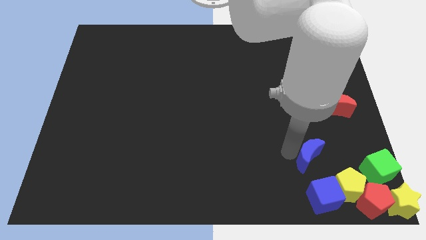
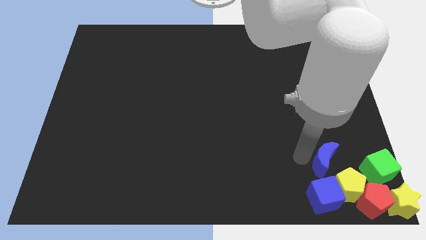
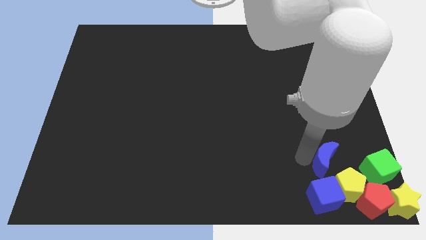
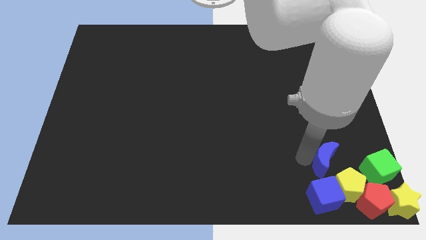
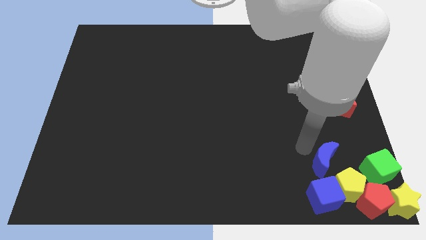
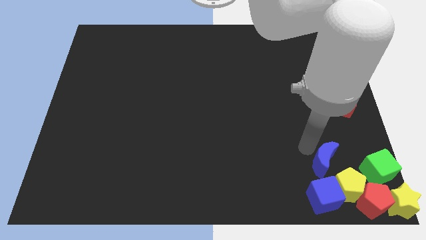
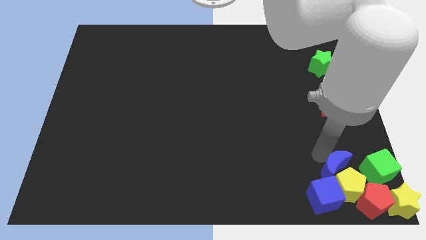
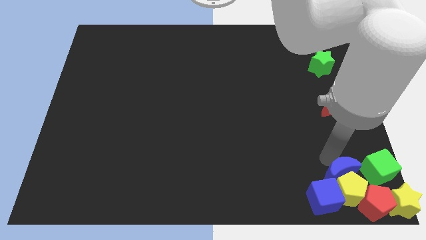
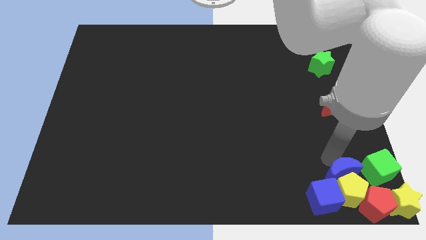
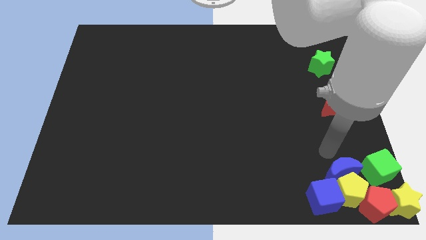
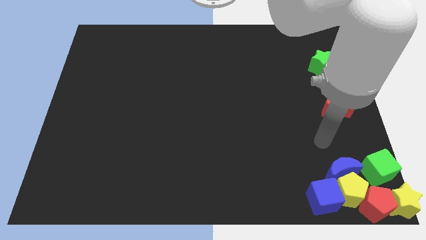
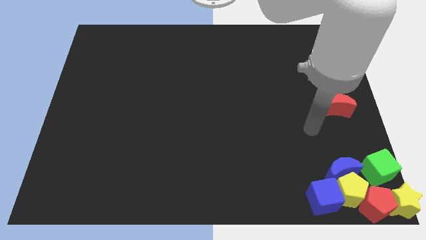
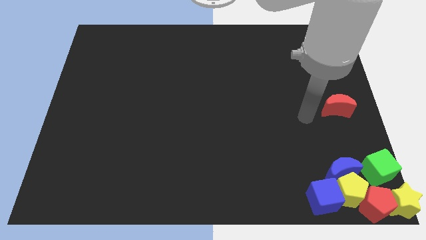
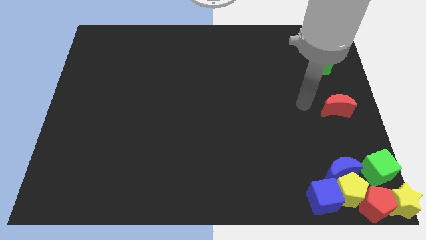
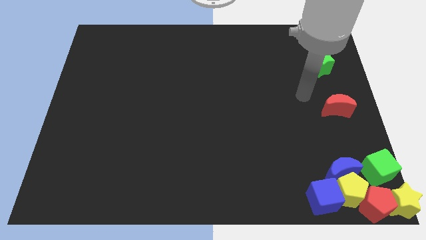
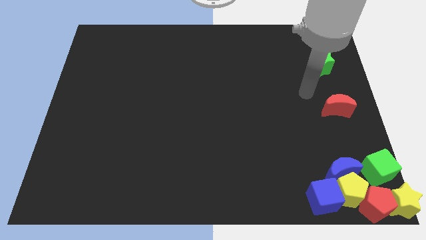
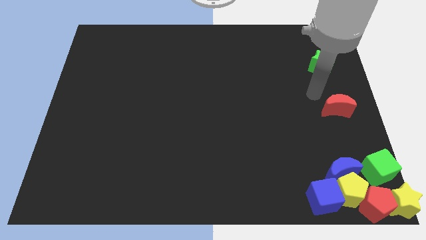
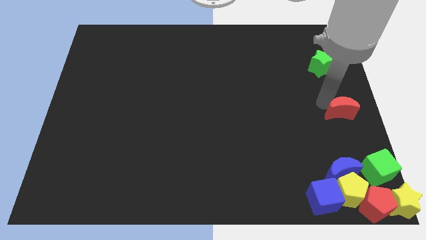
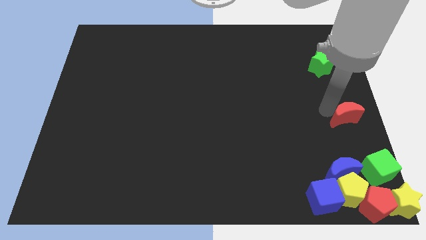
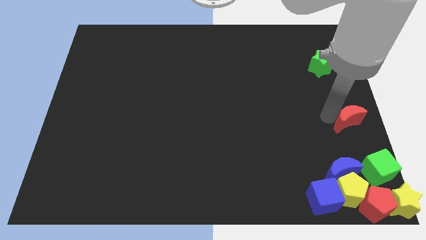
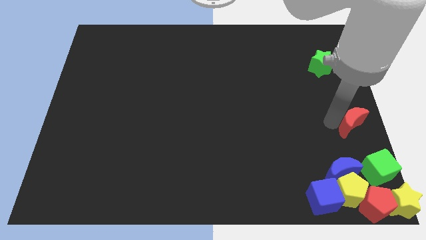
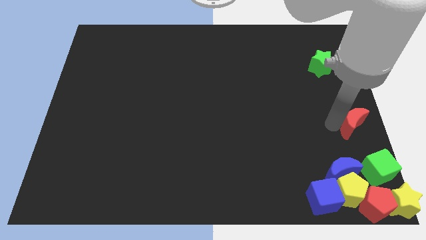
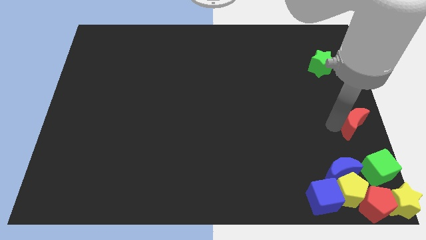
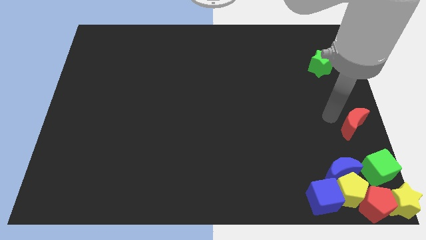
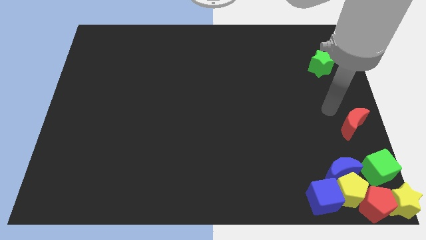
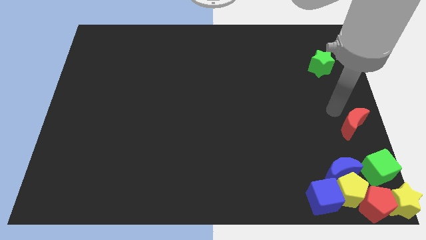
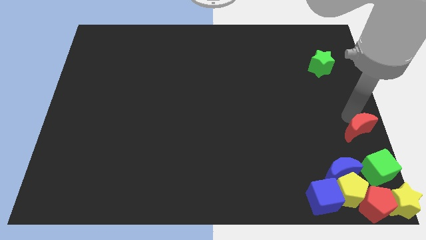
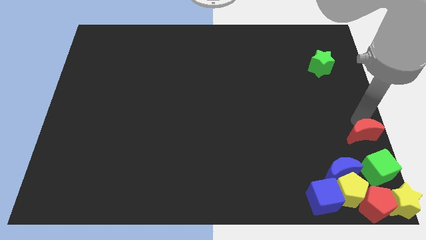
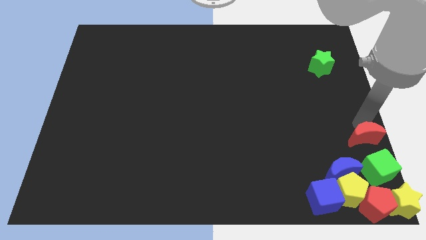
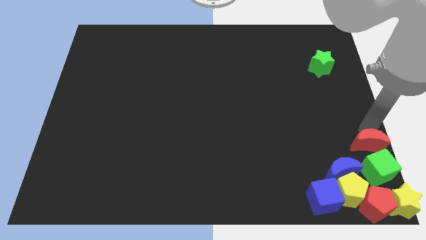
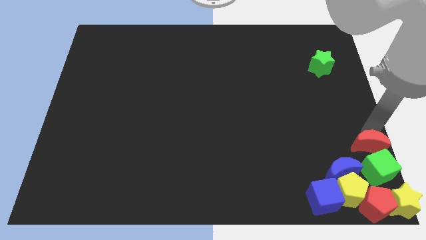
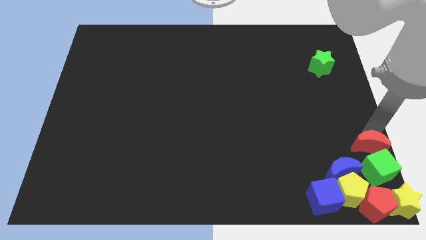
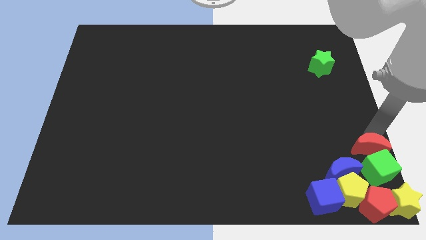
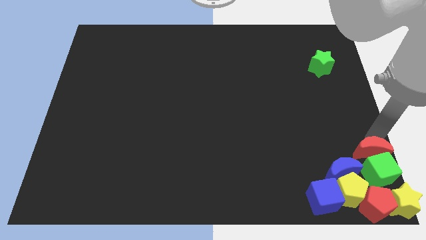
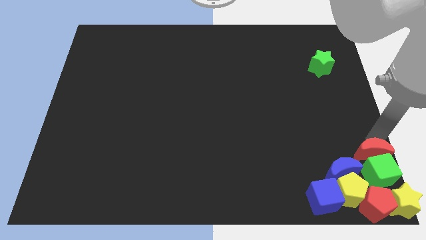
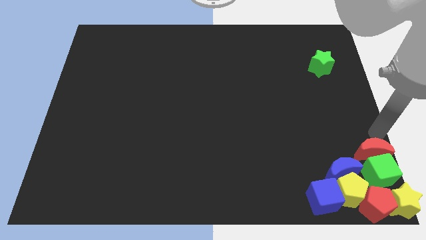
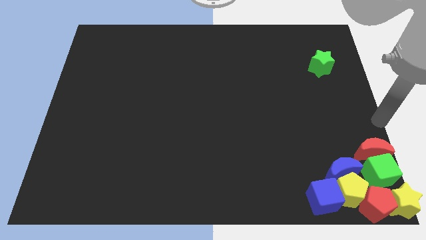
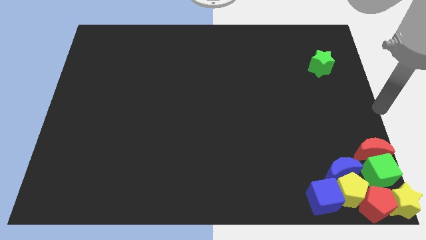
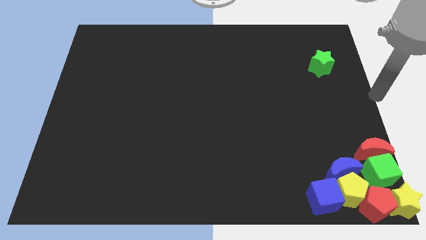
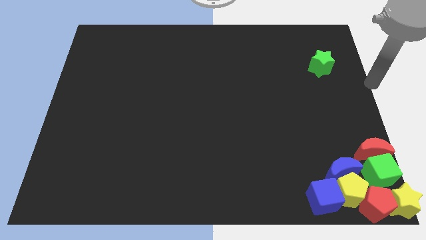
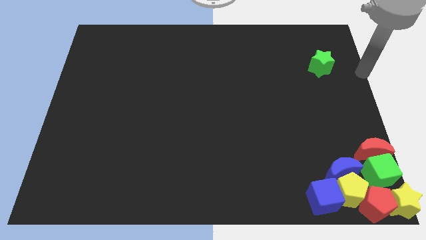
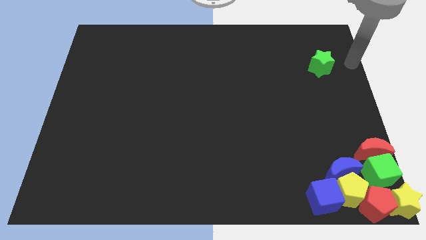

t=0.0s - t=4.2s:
move the red crescent above to the green cube

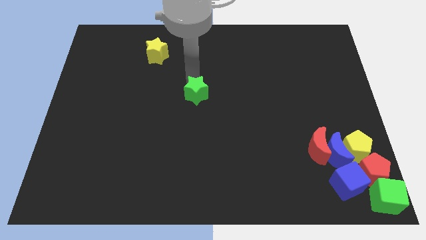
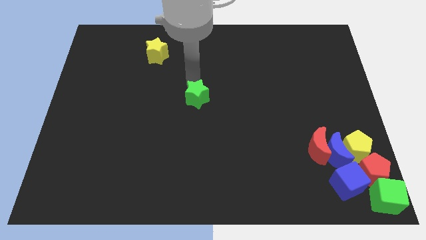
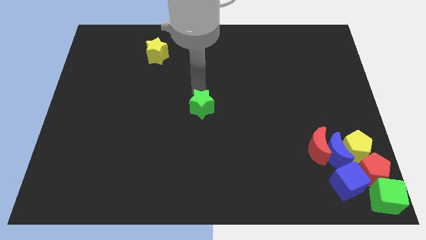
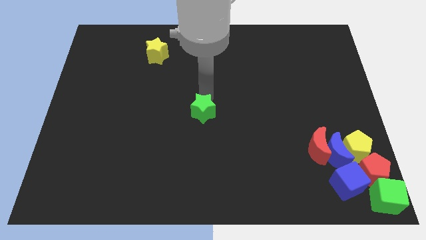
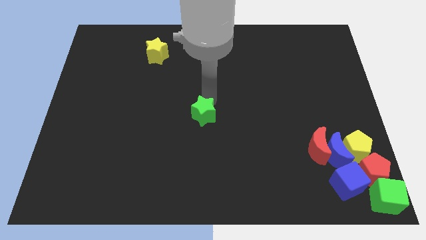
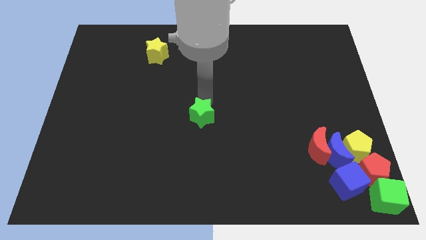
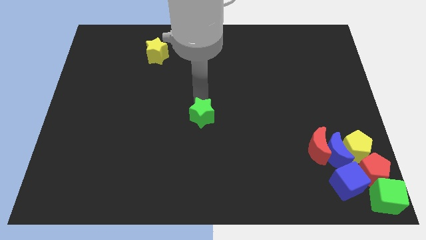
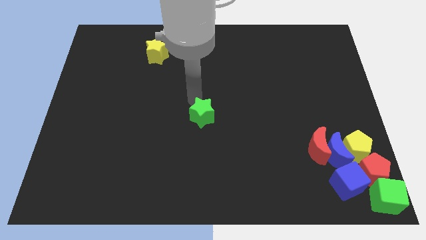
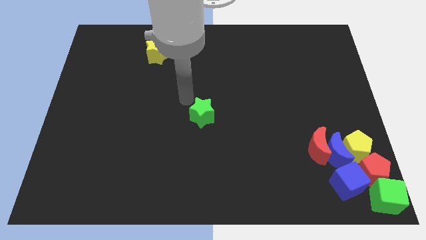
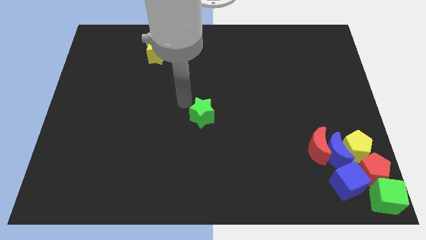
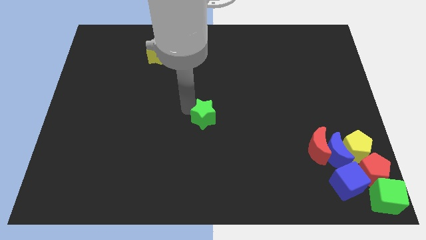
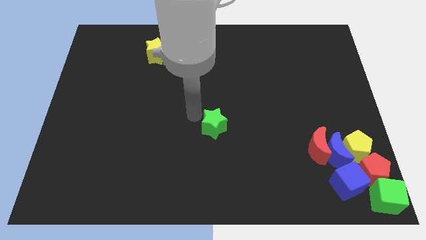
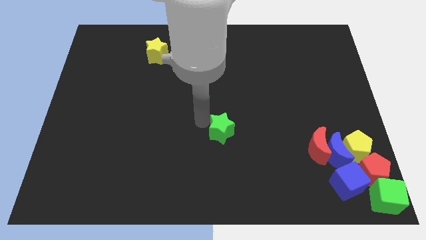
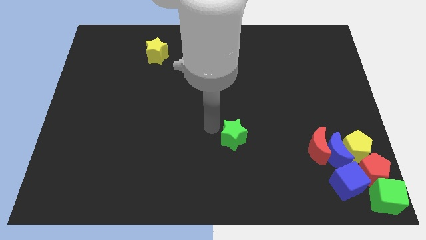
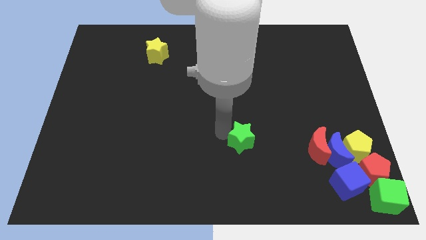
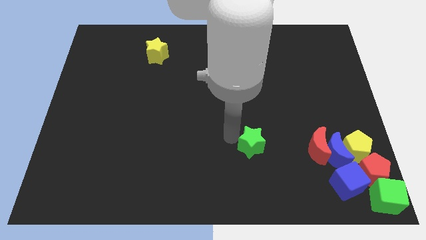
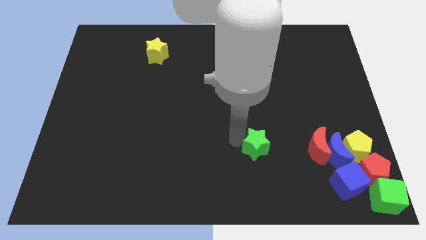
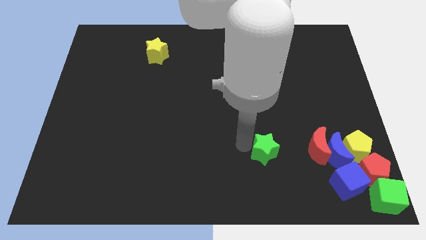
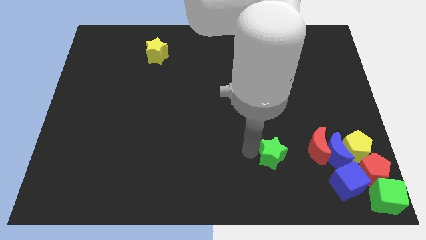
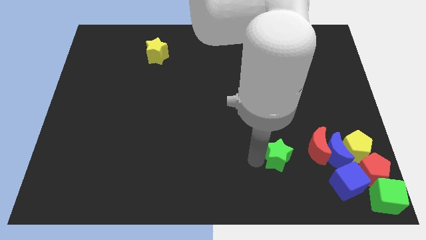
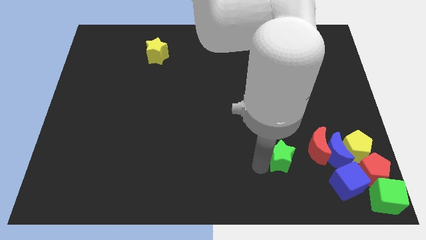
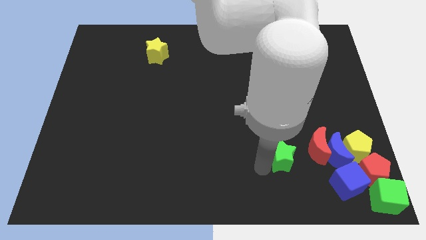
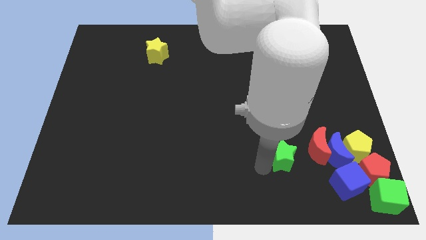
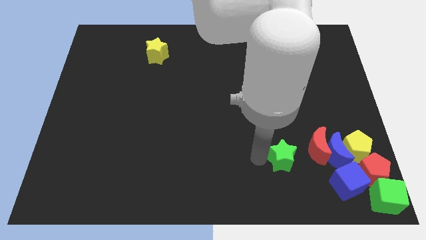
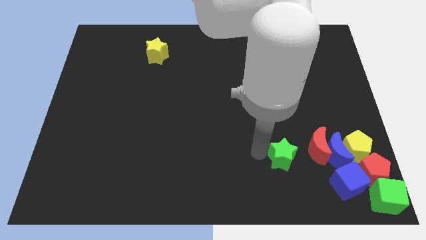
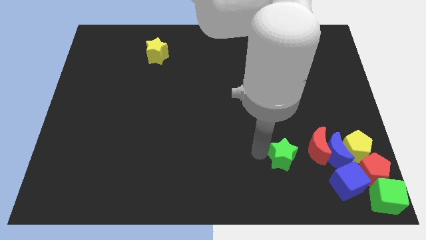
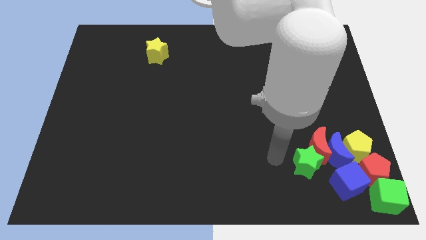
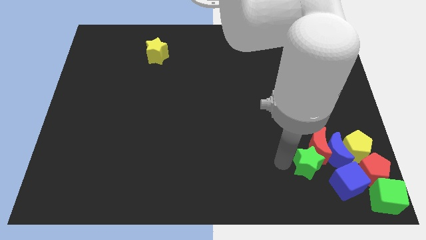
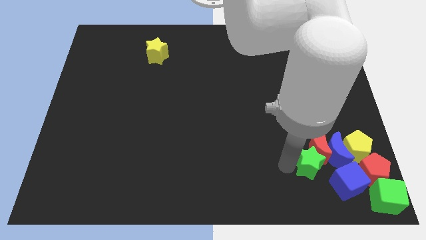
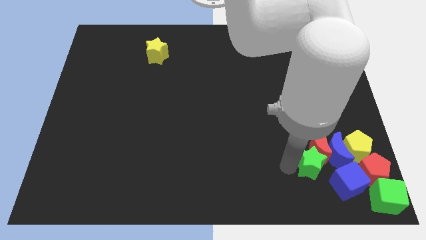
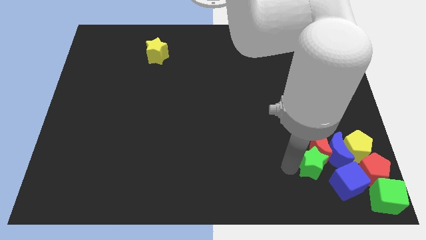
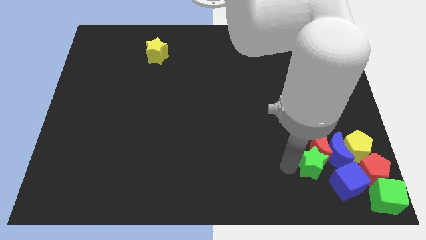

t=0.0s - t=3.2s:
push the green star into the red crescent

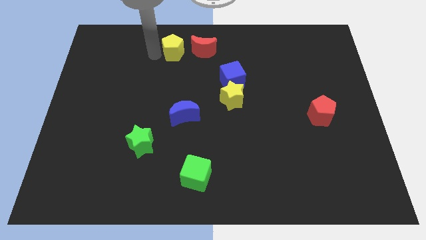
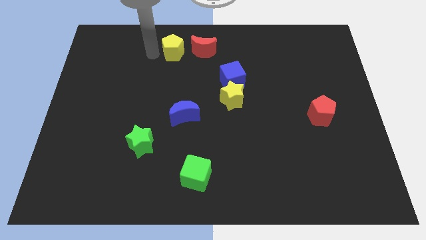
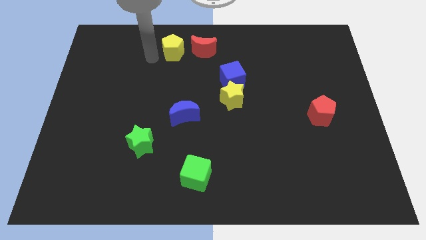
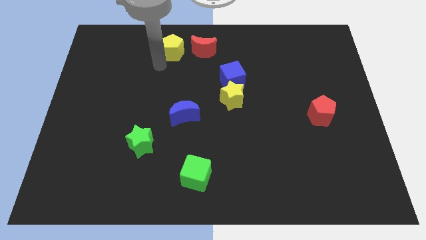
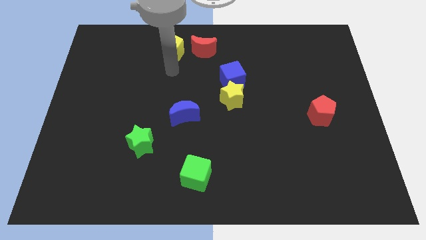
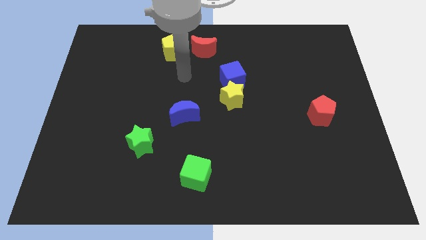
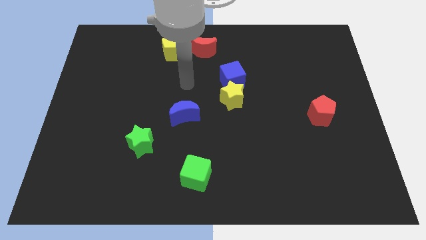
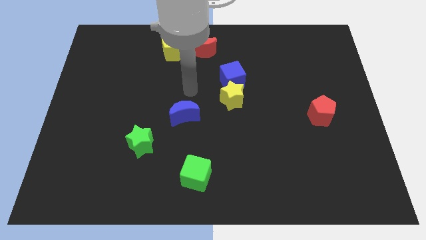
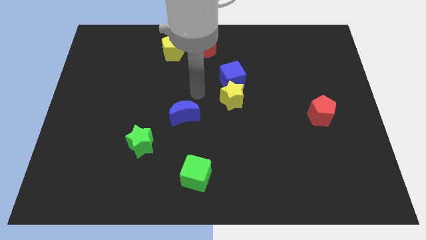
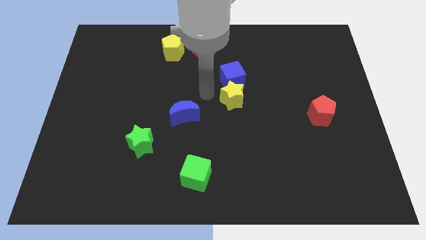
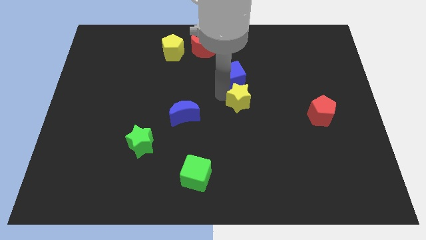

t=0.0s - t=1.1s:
touch the top of yellow star

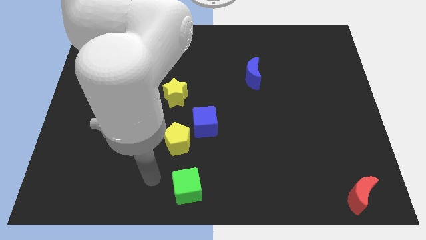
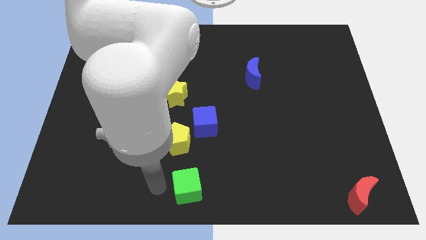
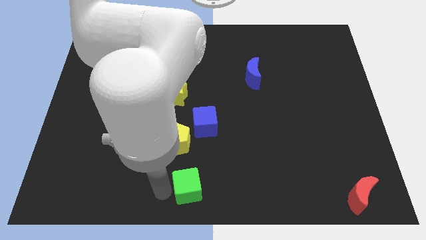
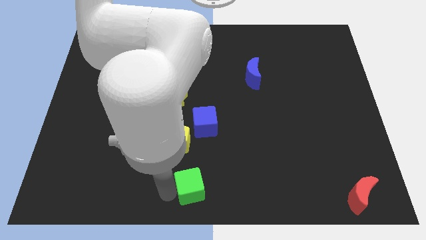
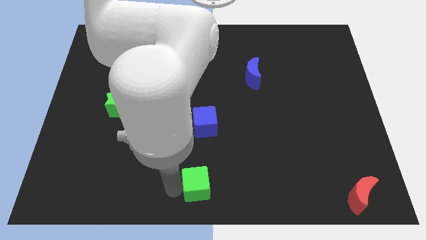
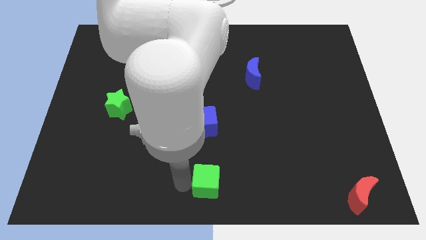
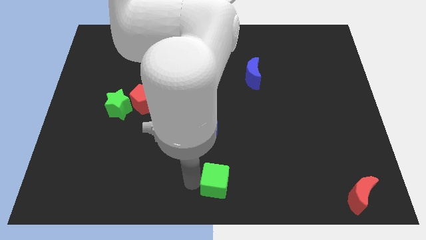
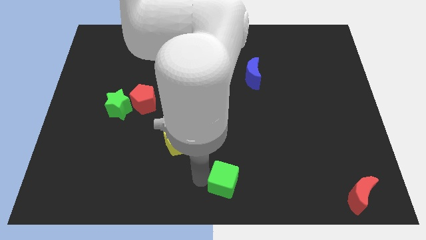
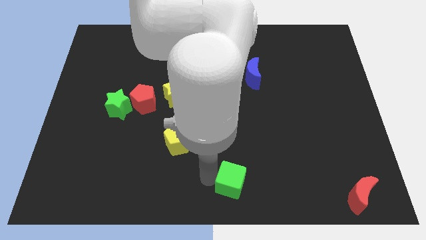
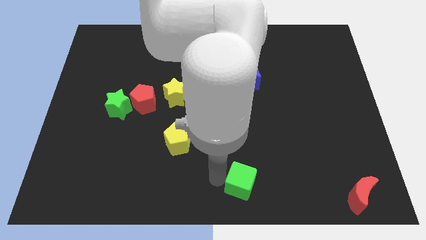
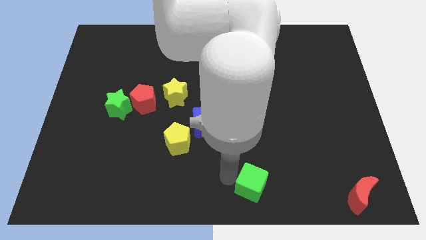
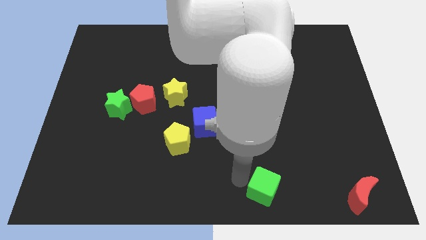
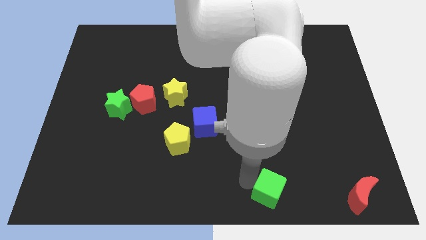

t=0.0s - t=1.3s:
move the green cube to the right of the board
